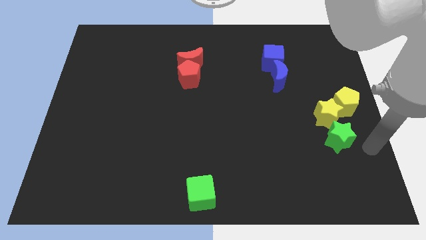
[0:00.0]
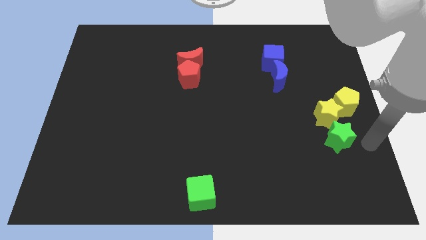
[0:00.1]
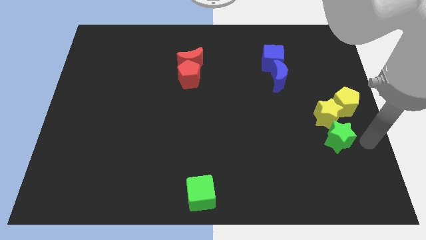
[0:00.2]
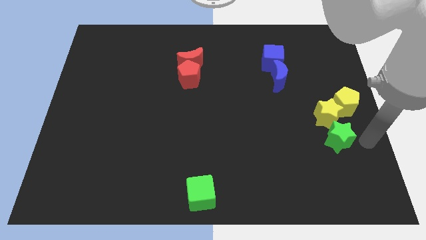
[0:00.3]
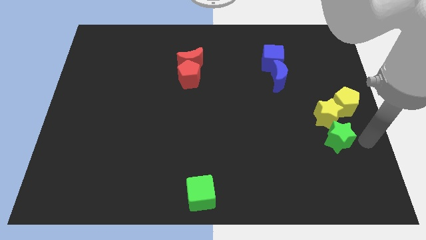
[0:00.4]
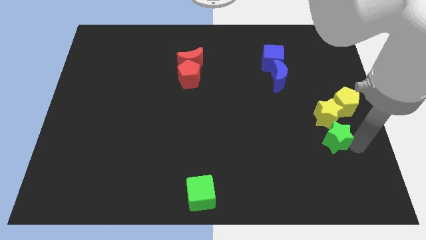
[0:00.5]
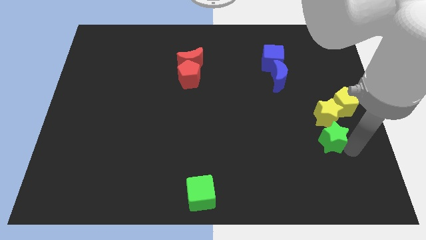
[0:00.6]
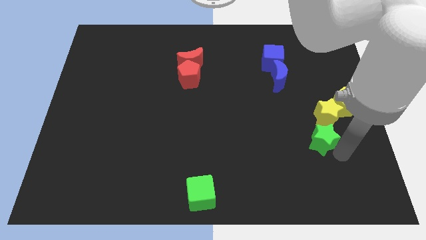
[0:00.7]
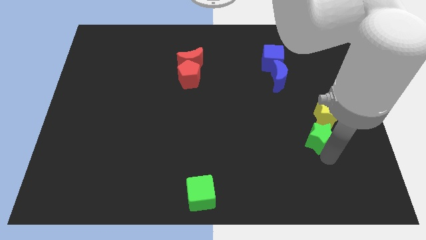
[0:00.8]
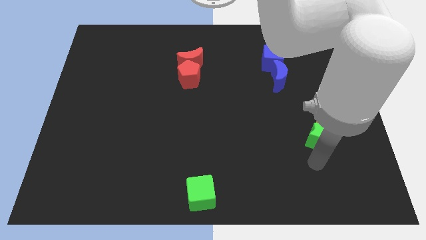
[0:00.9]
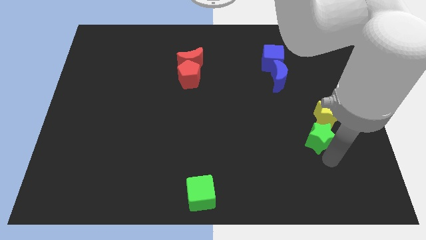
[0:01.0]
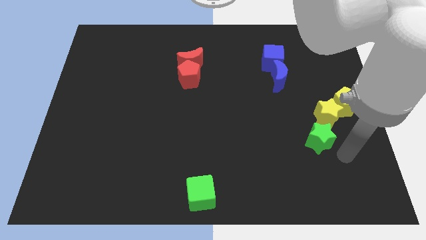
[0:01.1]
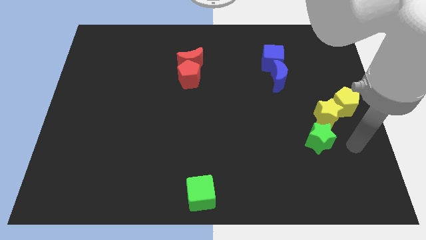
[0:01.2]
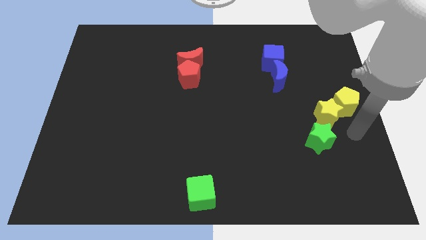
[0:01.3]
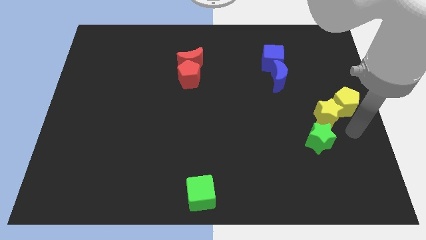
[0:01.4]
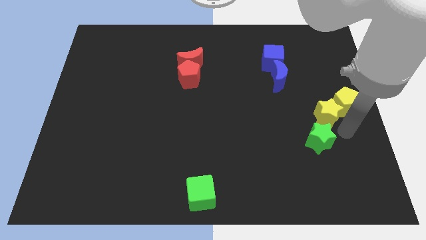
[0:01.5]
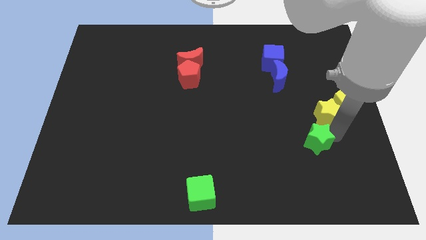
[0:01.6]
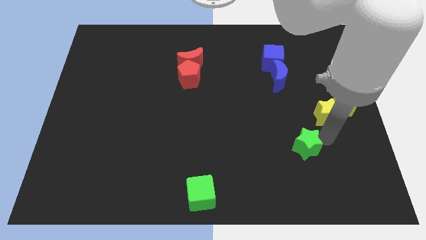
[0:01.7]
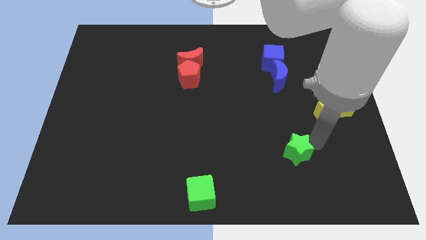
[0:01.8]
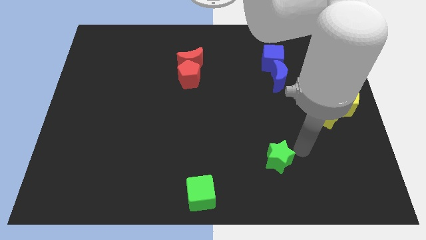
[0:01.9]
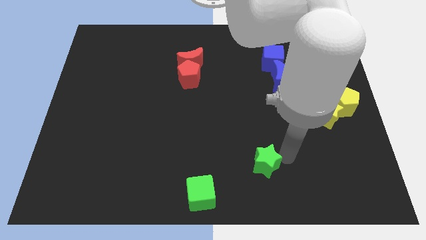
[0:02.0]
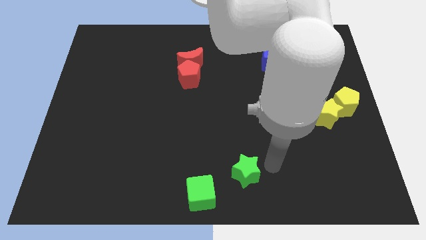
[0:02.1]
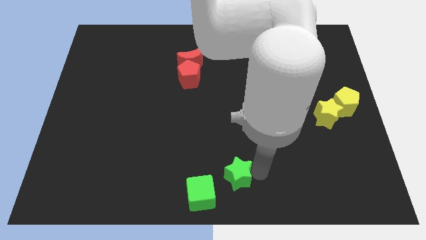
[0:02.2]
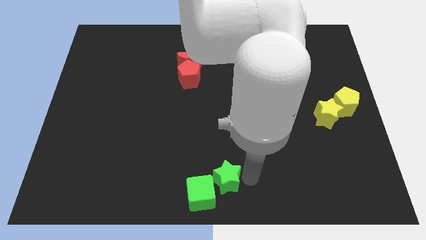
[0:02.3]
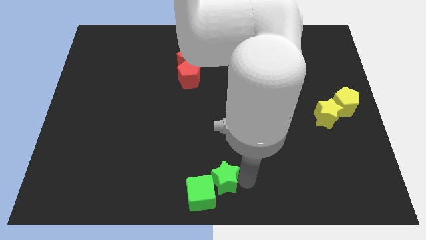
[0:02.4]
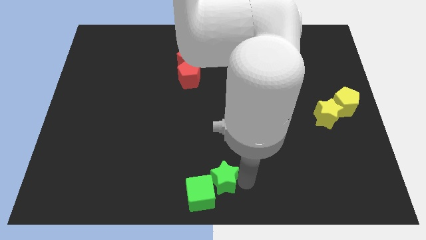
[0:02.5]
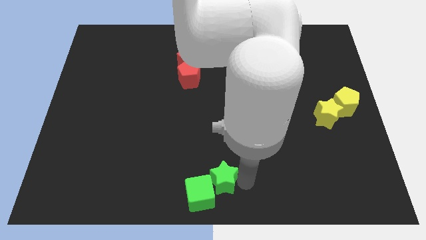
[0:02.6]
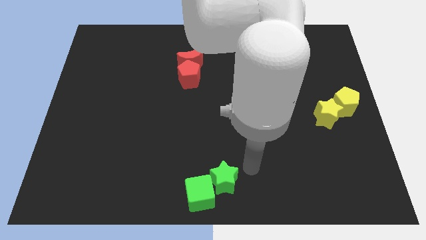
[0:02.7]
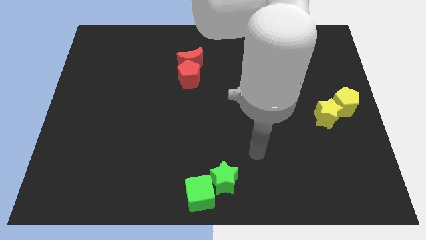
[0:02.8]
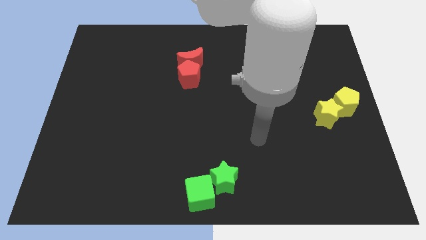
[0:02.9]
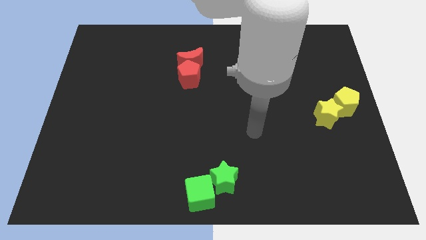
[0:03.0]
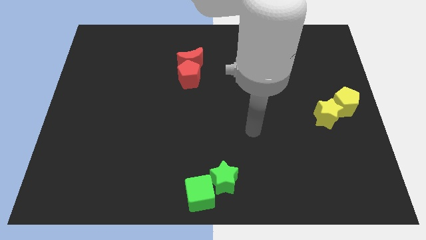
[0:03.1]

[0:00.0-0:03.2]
place the green star at the bottom center of the board

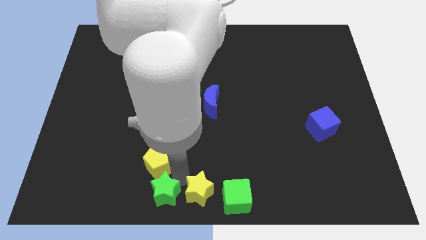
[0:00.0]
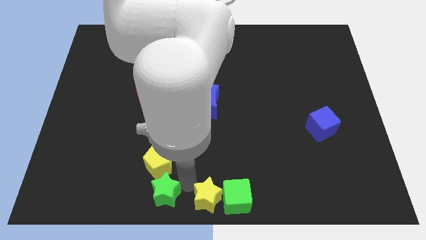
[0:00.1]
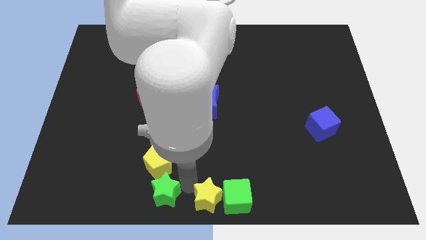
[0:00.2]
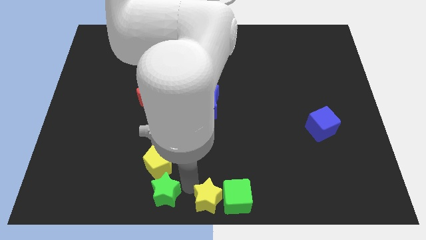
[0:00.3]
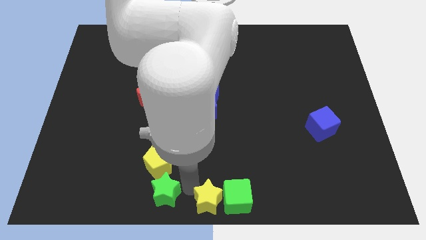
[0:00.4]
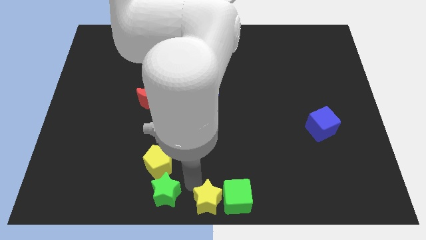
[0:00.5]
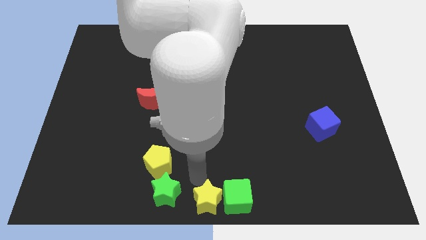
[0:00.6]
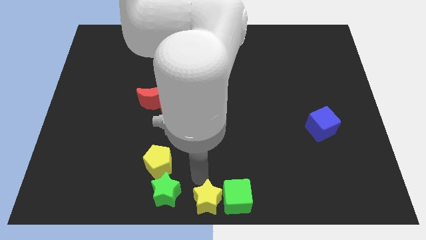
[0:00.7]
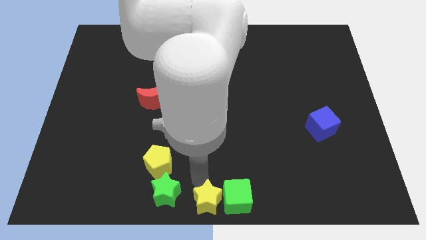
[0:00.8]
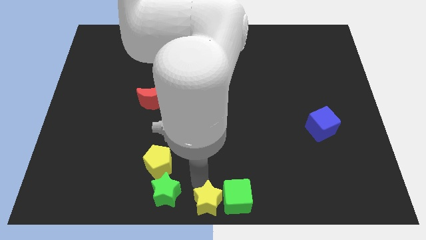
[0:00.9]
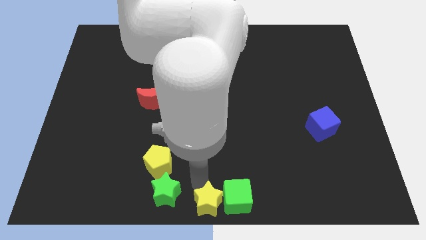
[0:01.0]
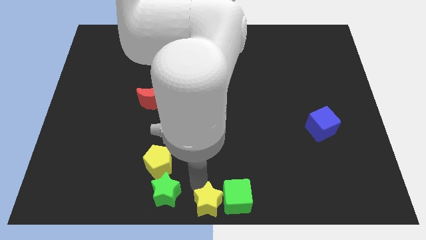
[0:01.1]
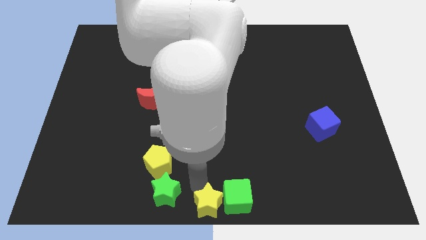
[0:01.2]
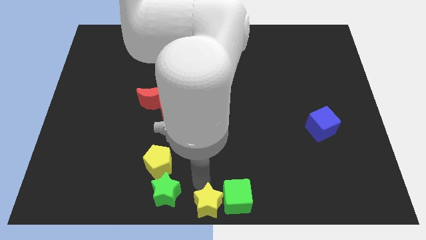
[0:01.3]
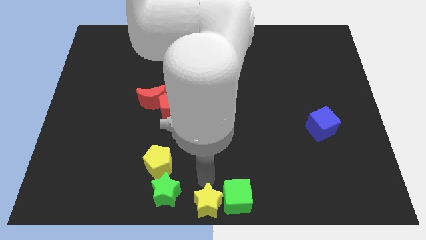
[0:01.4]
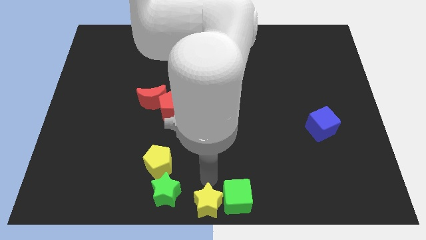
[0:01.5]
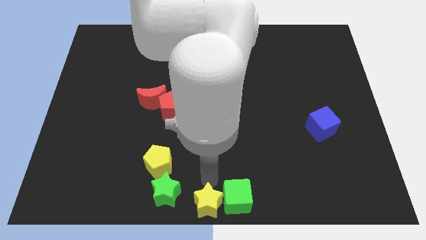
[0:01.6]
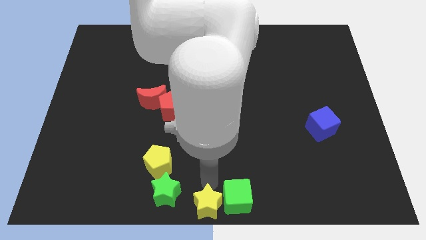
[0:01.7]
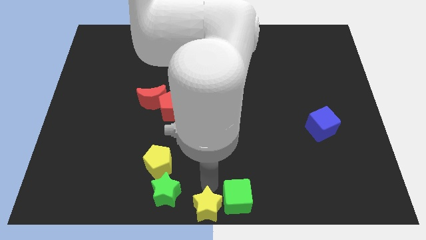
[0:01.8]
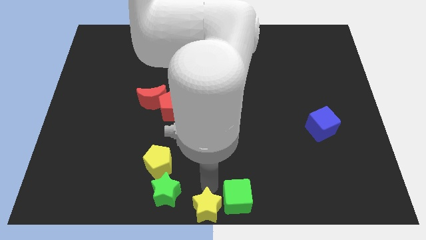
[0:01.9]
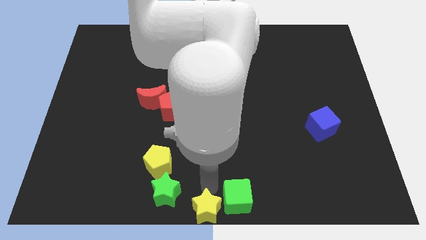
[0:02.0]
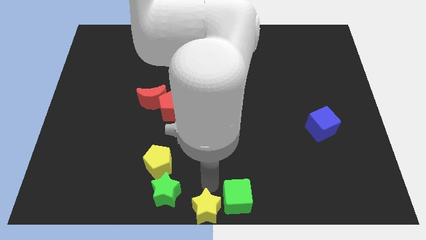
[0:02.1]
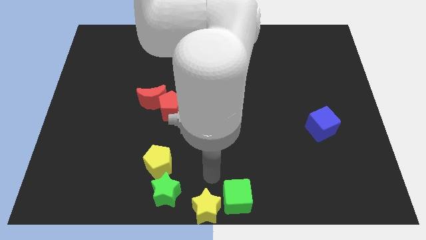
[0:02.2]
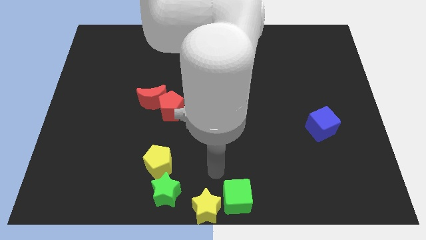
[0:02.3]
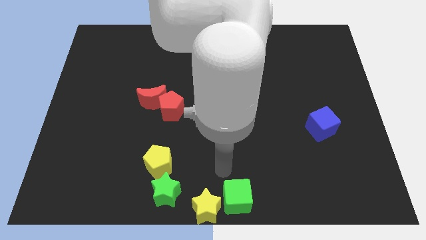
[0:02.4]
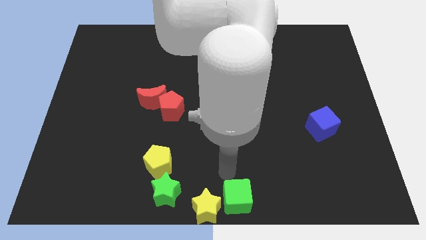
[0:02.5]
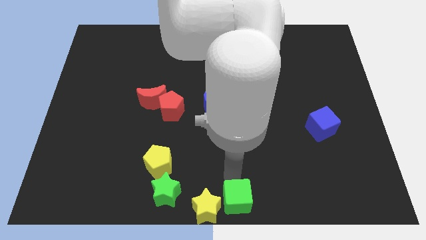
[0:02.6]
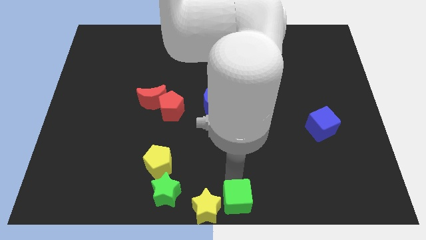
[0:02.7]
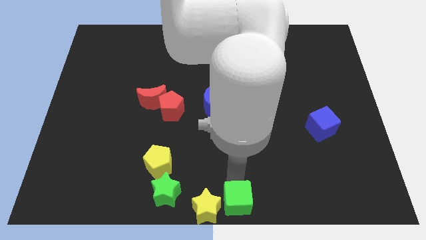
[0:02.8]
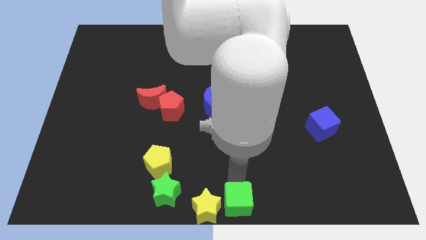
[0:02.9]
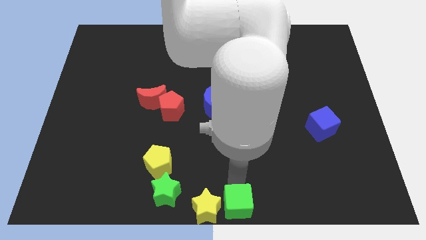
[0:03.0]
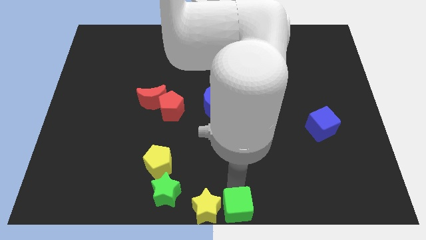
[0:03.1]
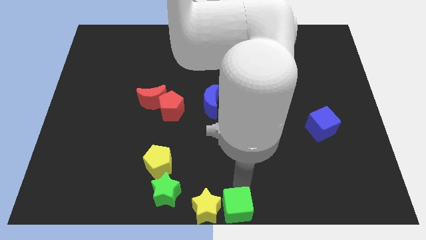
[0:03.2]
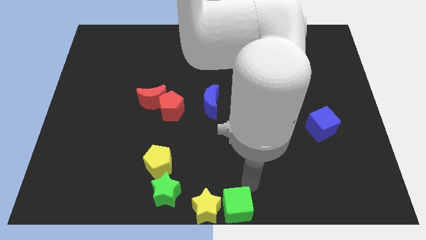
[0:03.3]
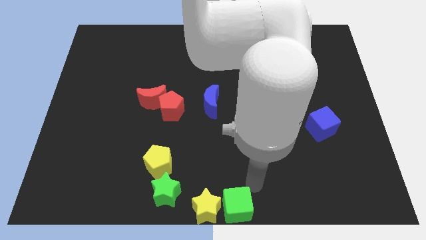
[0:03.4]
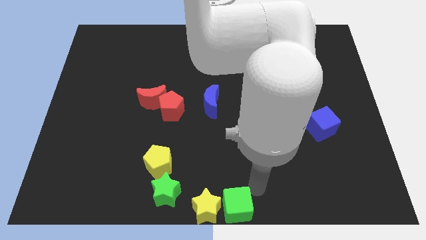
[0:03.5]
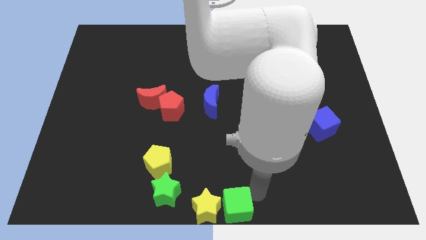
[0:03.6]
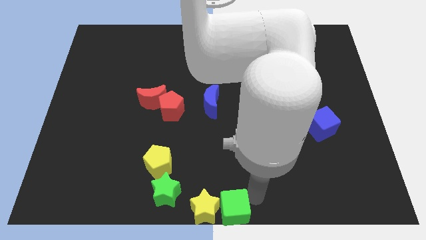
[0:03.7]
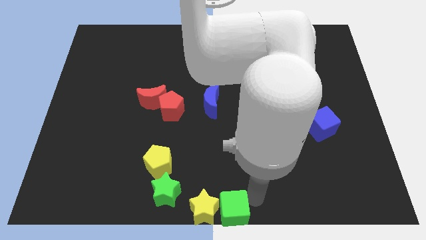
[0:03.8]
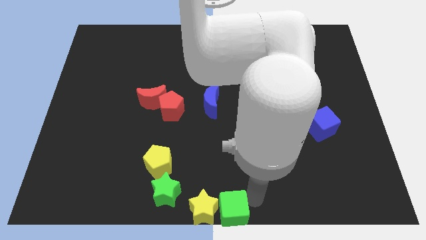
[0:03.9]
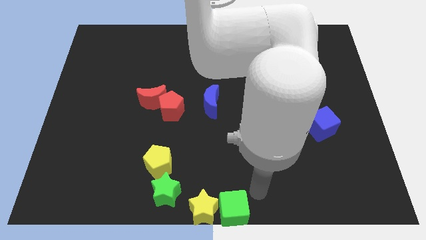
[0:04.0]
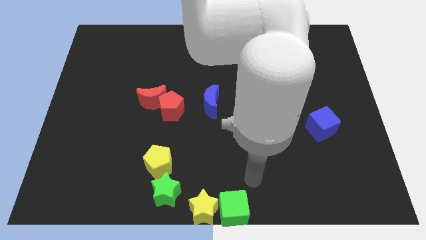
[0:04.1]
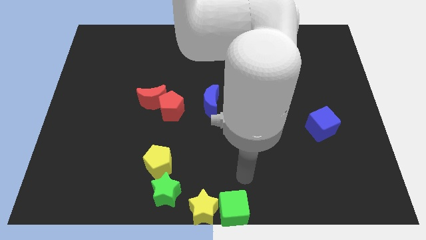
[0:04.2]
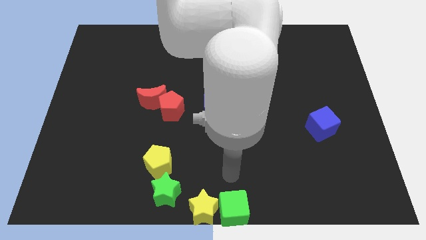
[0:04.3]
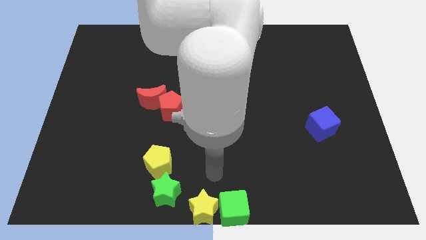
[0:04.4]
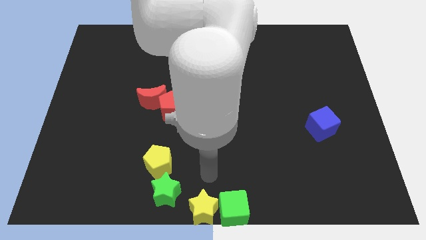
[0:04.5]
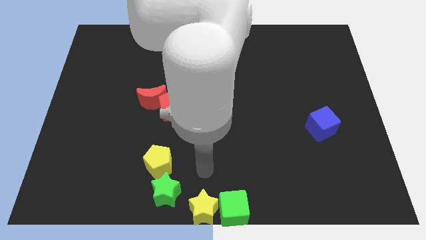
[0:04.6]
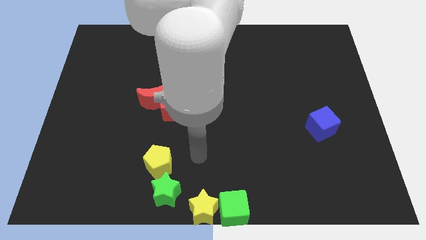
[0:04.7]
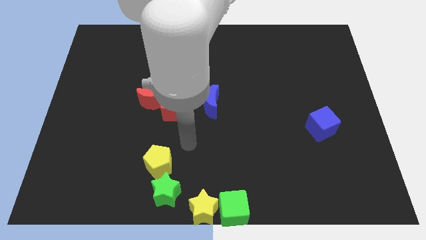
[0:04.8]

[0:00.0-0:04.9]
push the yellow star and the green cube to the bottom center of the board

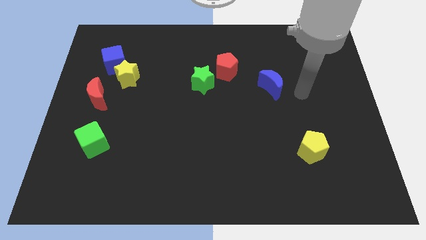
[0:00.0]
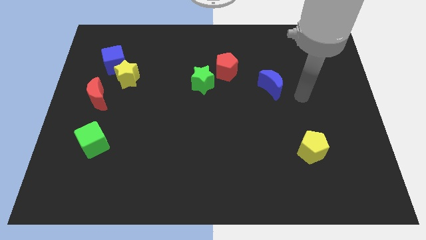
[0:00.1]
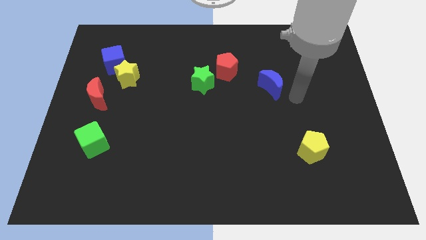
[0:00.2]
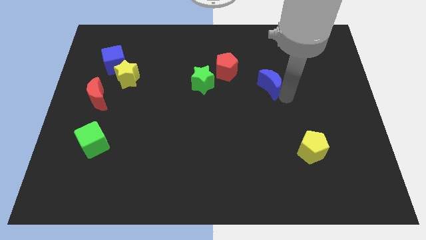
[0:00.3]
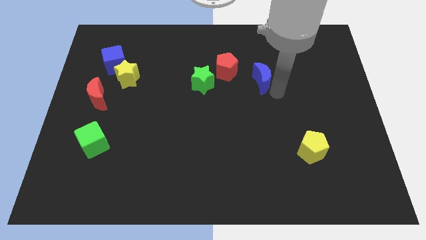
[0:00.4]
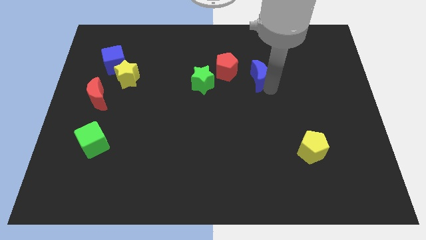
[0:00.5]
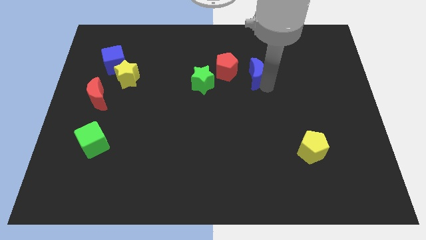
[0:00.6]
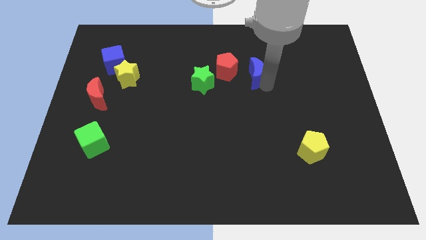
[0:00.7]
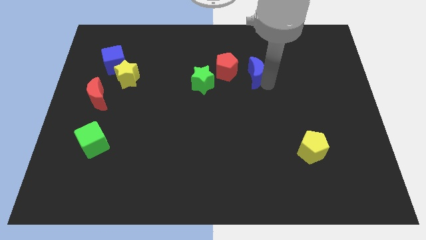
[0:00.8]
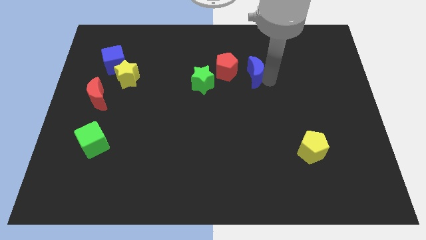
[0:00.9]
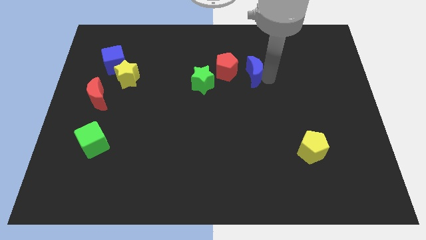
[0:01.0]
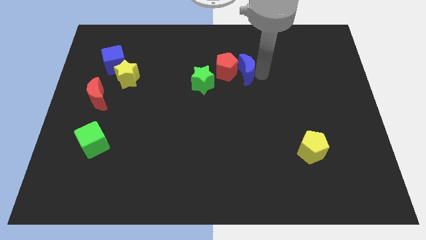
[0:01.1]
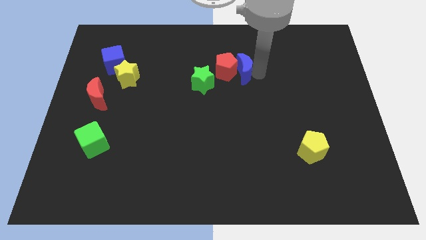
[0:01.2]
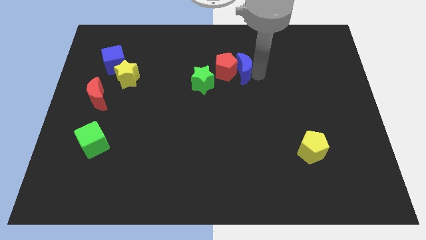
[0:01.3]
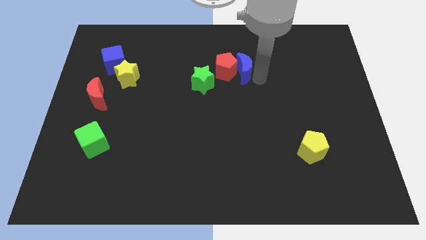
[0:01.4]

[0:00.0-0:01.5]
put the blue moon and red pentagon together
